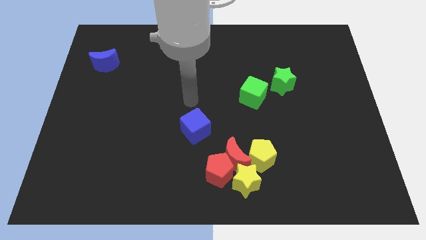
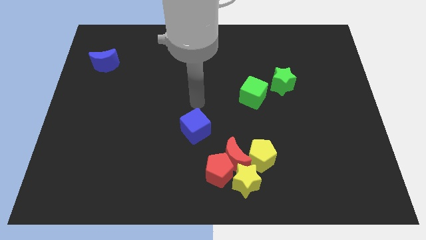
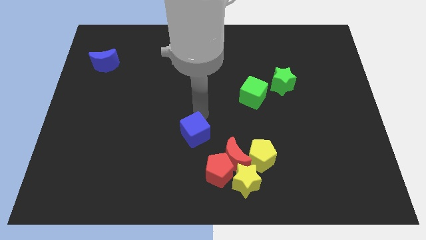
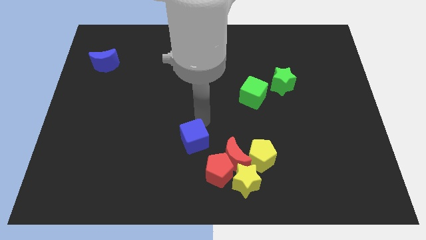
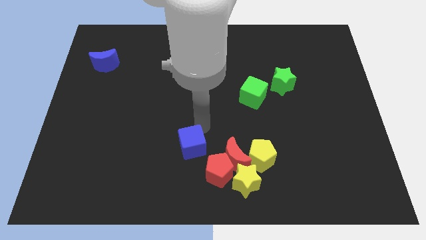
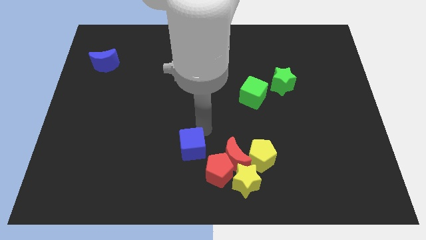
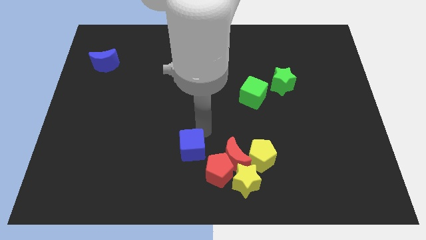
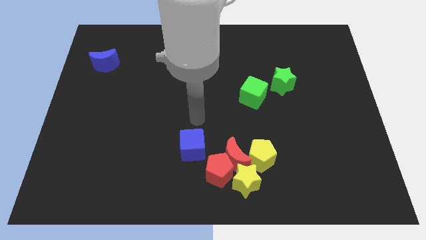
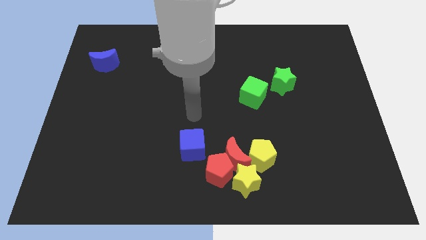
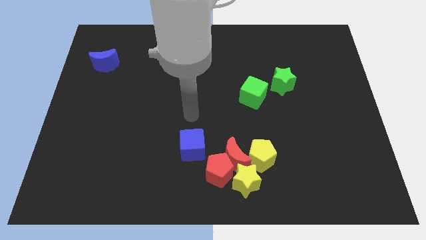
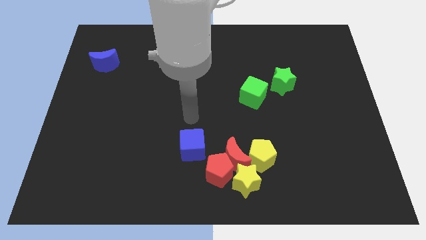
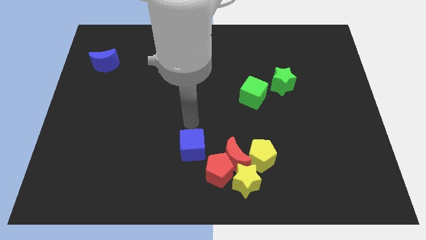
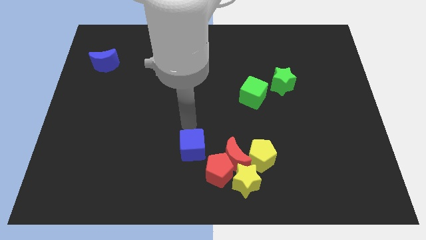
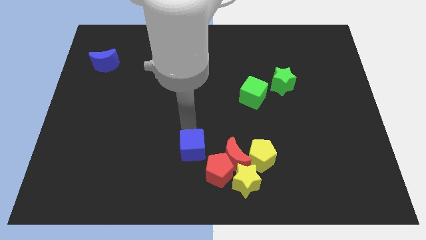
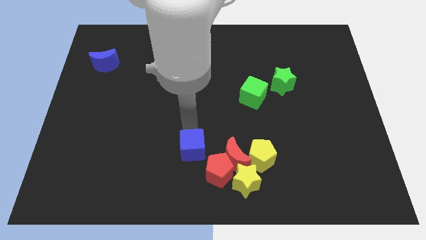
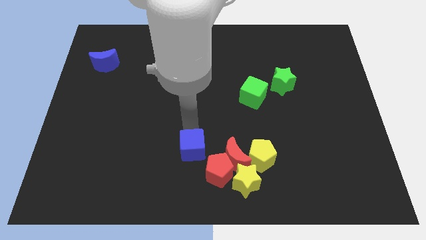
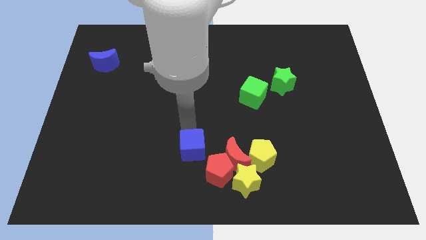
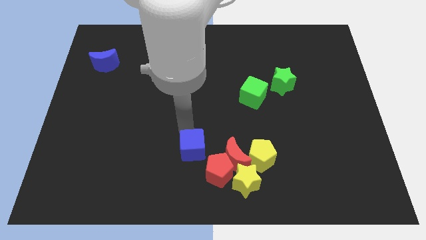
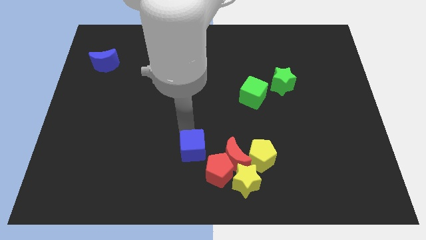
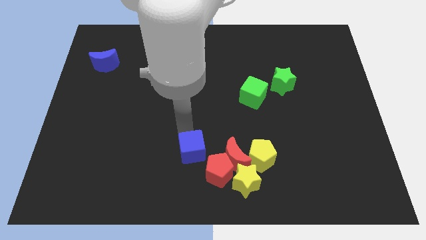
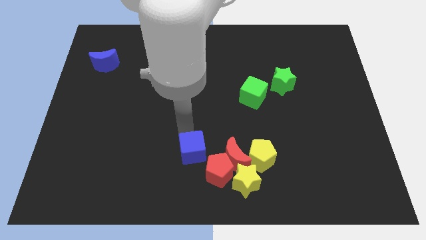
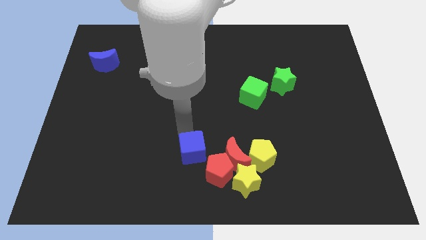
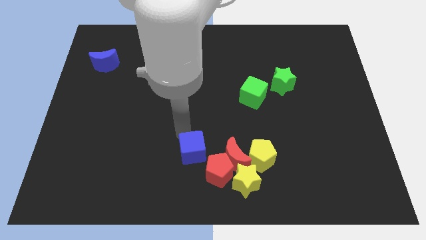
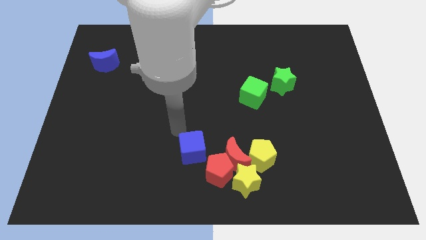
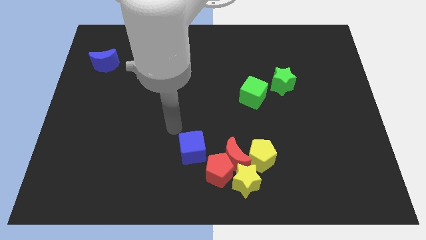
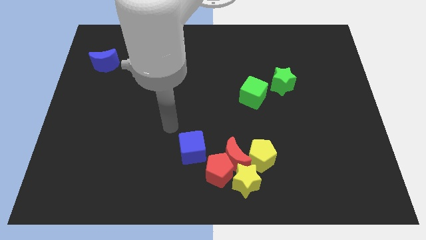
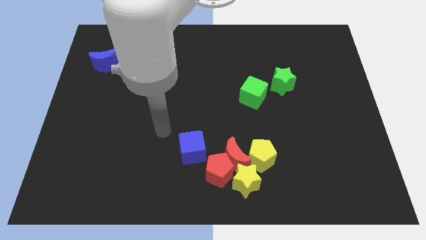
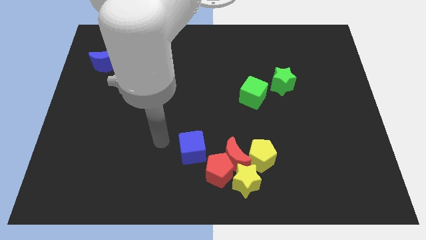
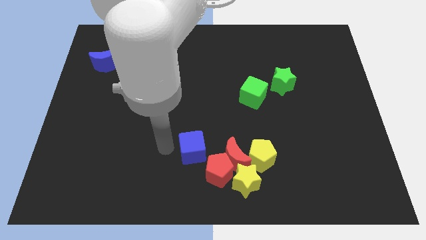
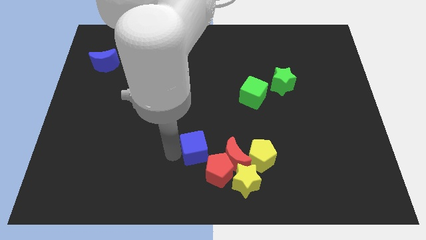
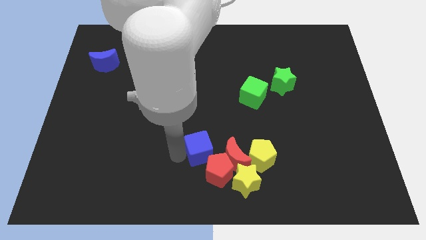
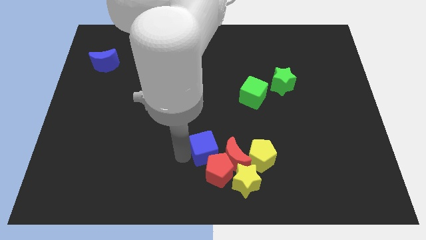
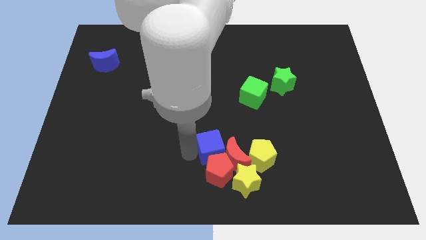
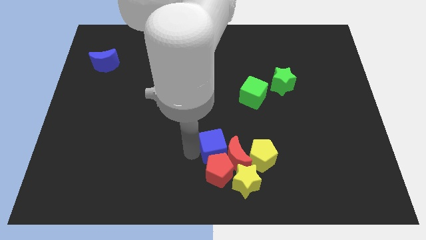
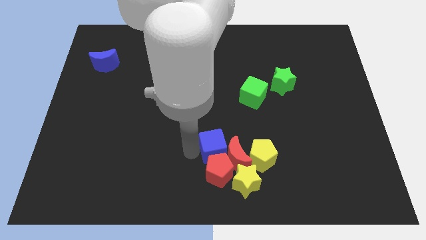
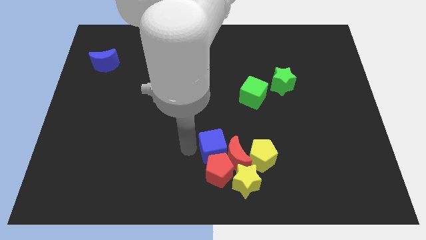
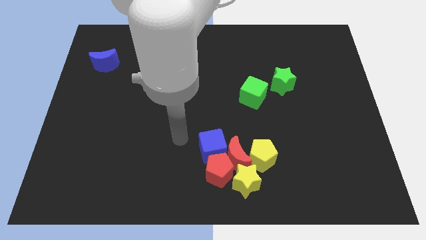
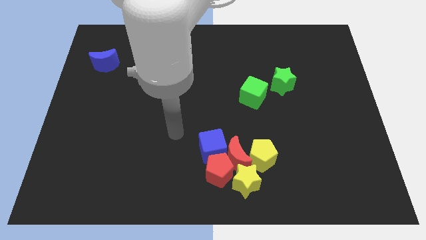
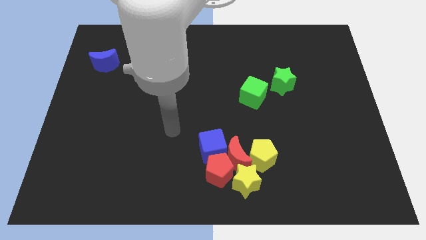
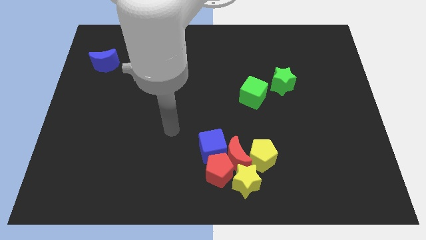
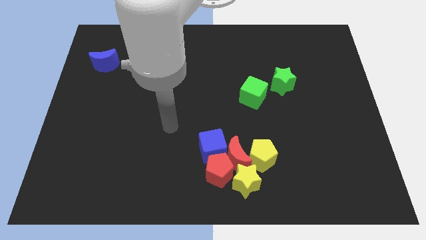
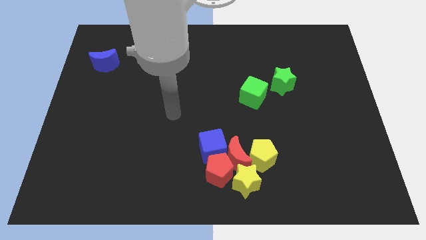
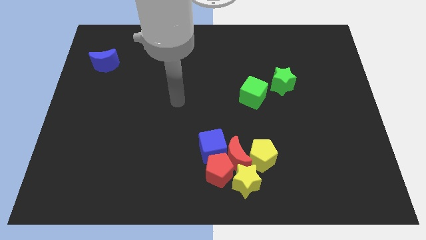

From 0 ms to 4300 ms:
move the blue cube into the red blocks

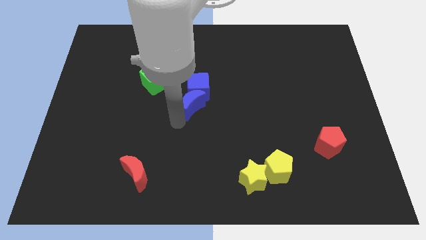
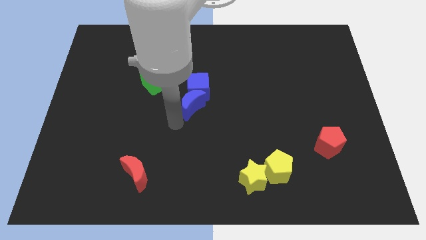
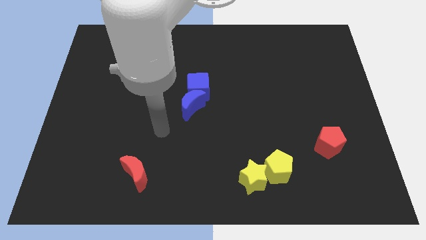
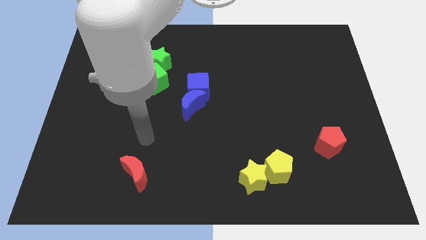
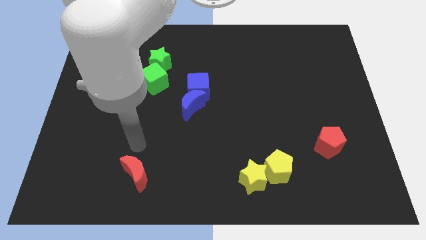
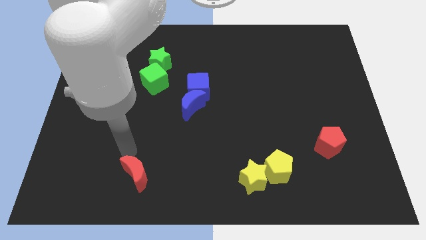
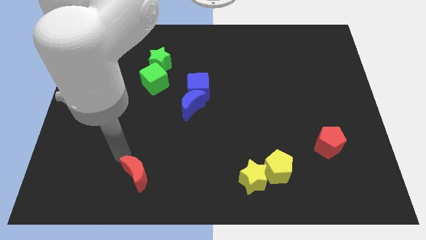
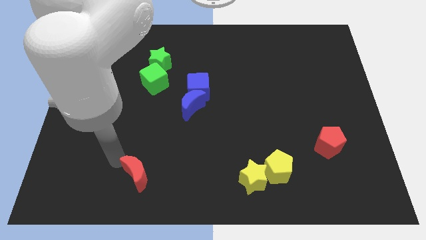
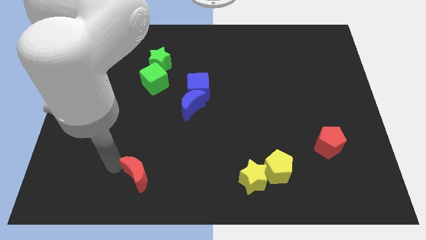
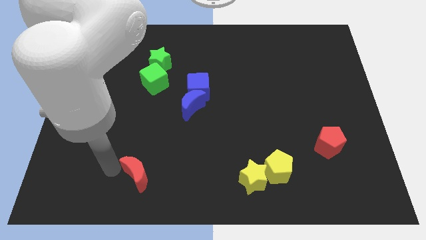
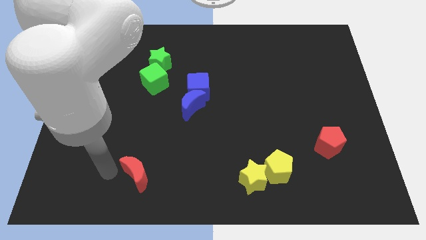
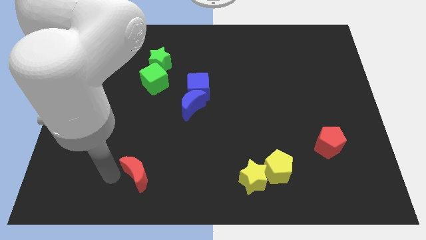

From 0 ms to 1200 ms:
move the arm away from the blue moon

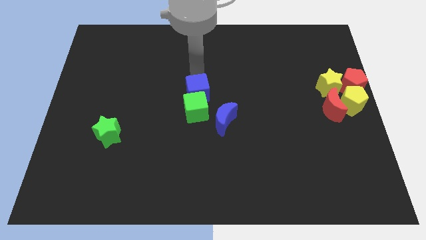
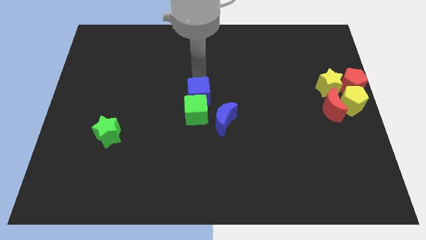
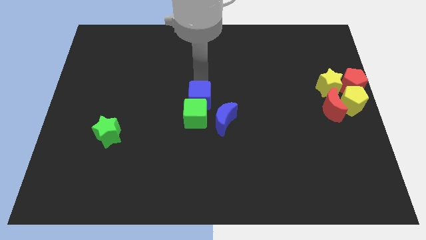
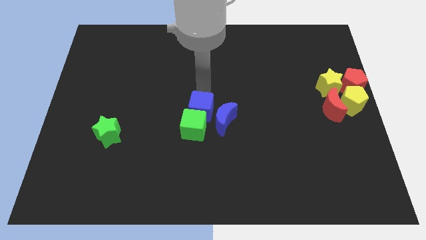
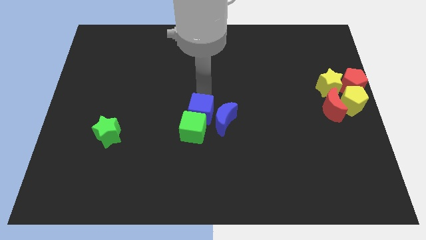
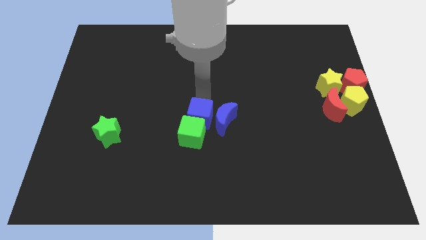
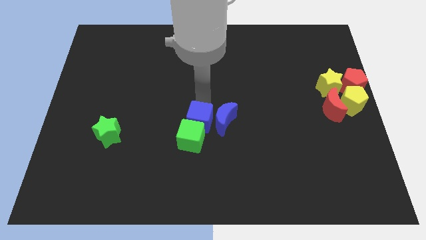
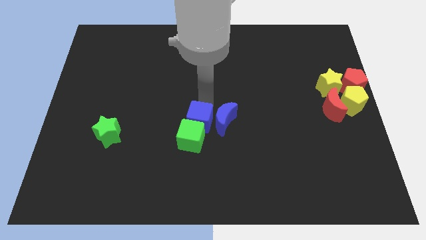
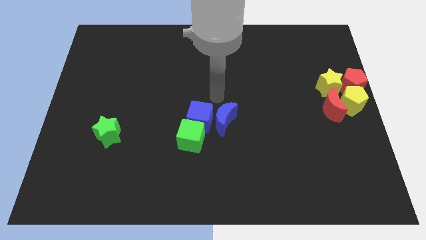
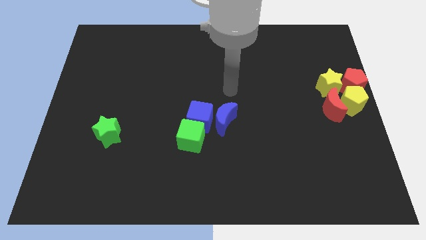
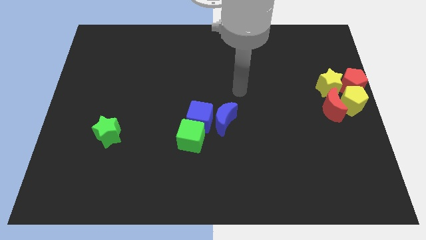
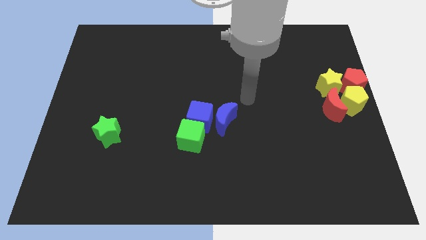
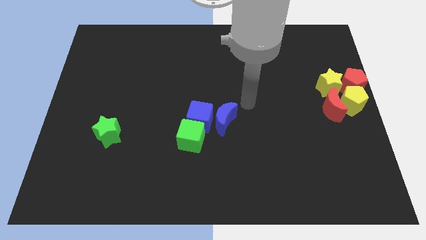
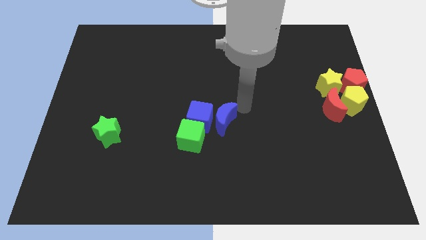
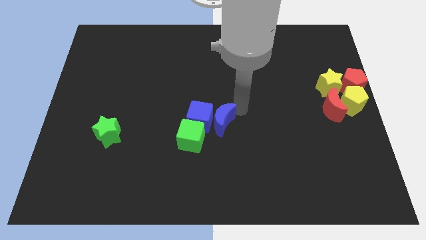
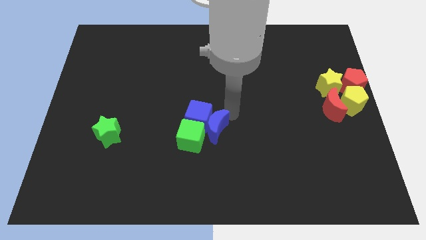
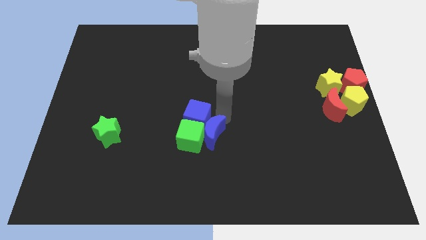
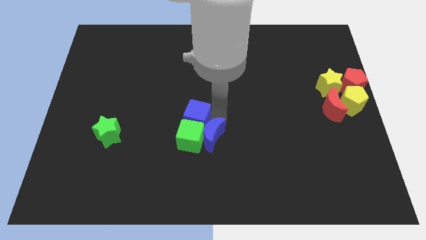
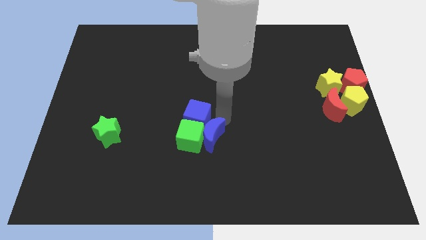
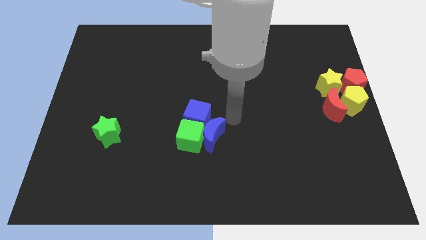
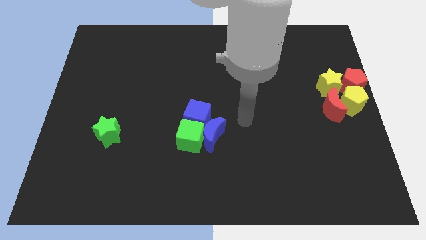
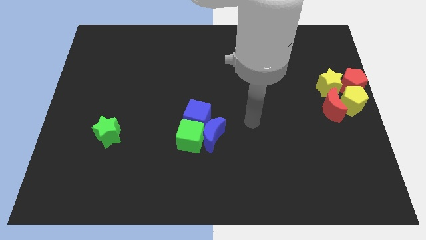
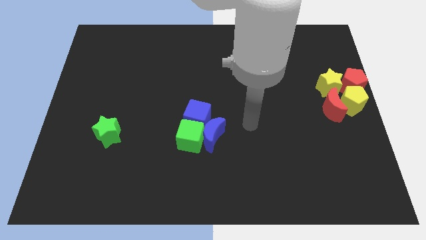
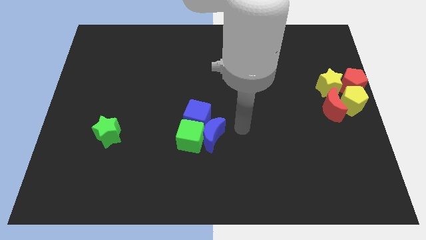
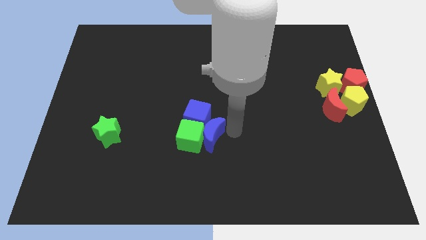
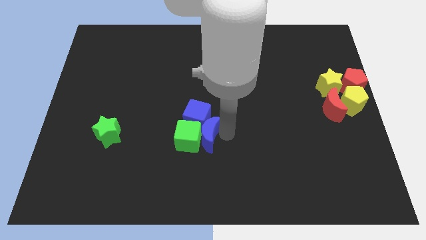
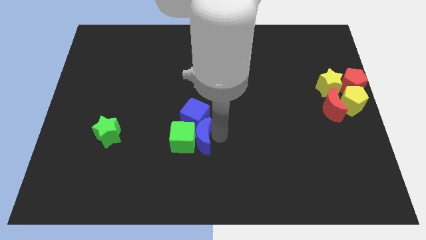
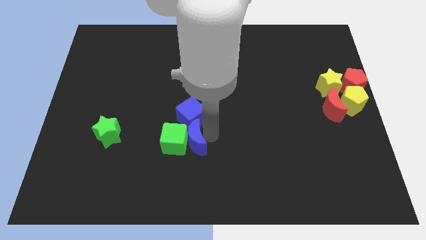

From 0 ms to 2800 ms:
push blue crescent above blue cube

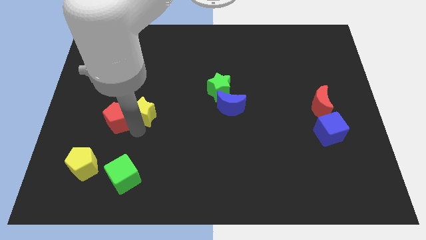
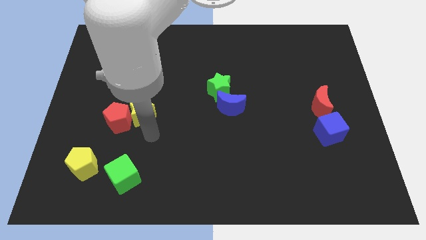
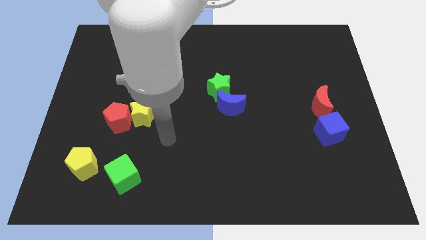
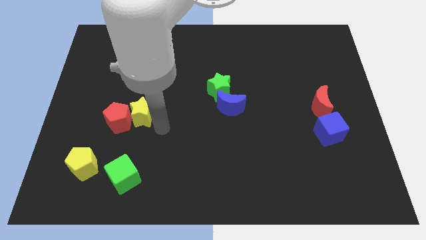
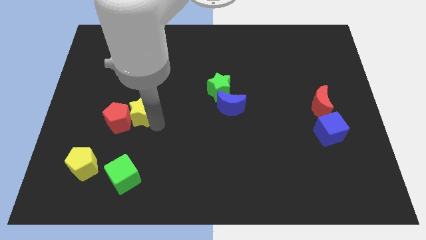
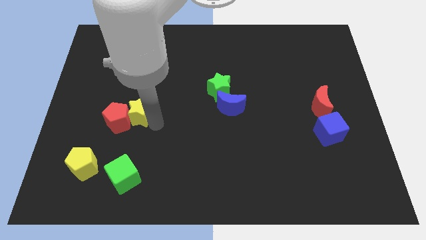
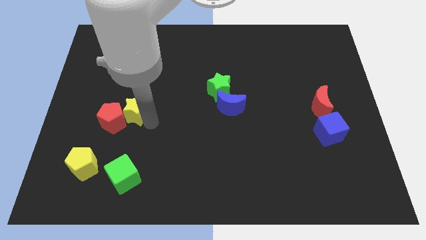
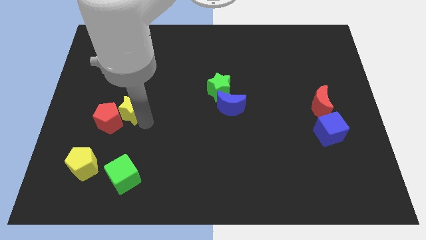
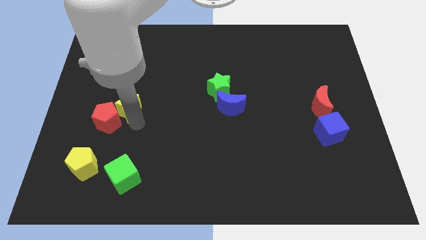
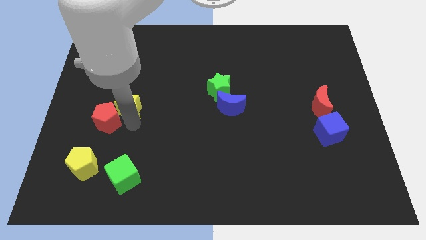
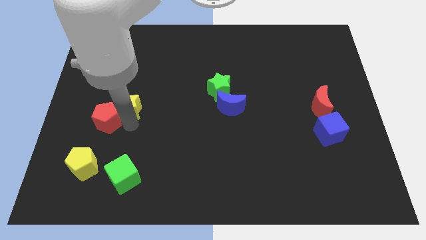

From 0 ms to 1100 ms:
push the yellow star into the red pentagon
